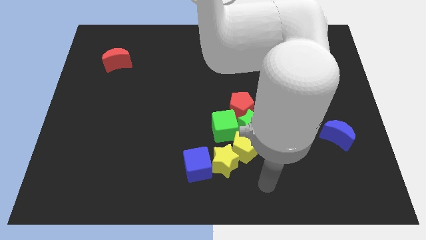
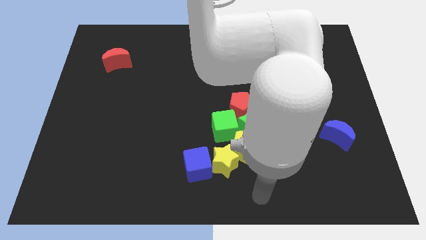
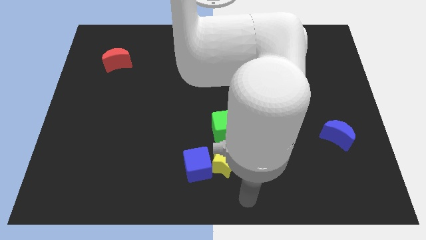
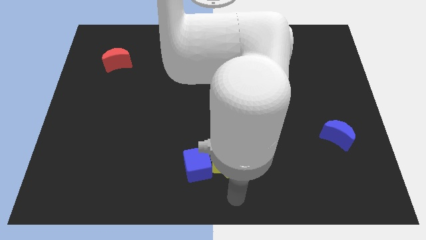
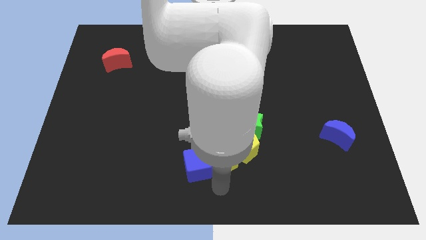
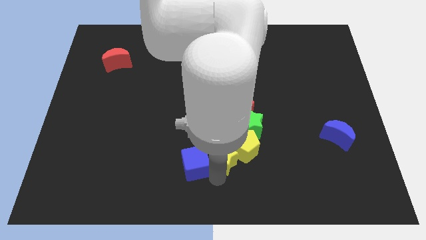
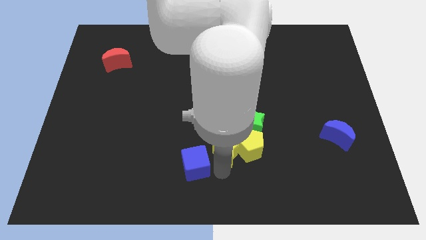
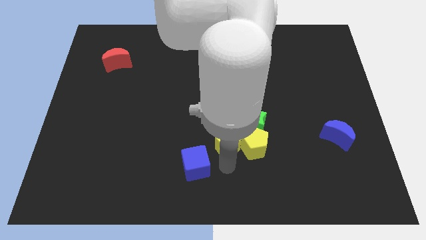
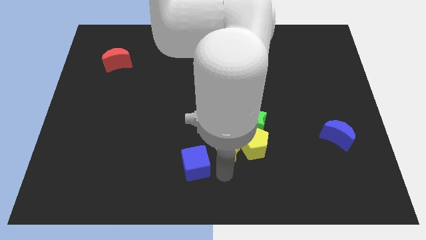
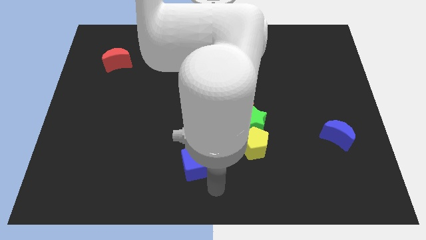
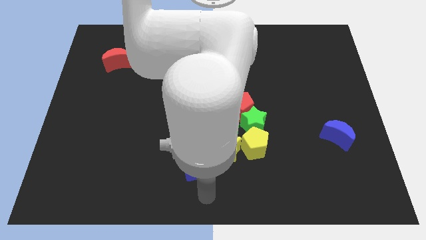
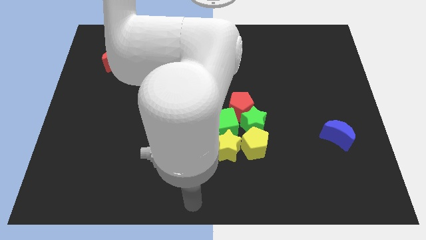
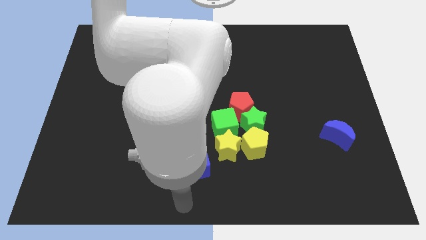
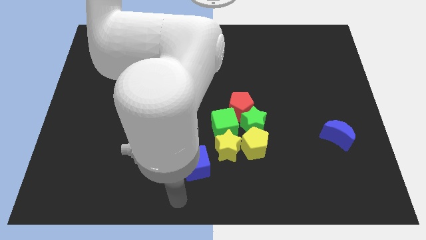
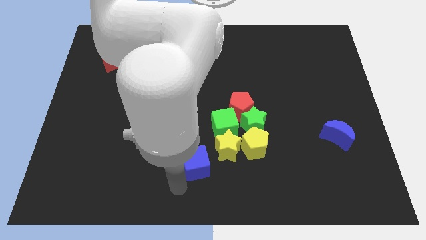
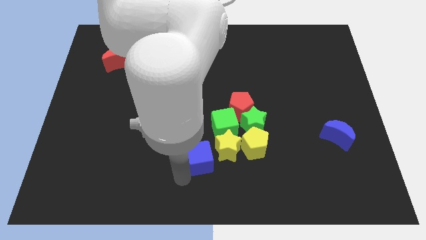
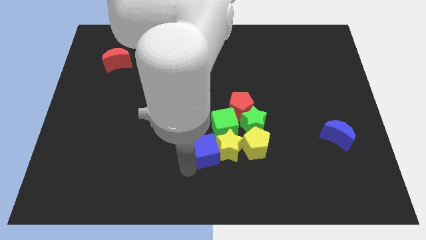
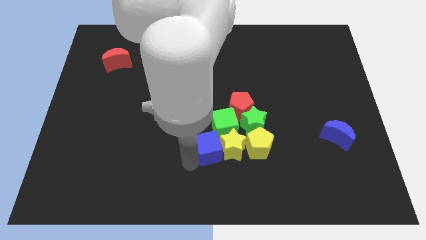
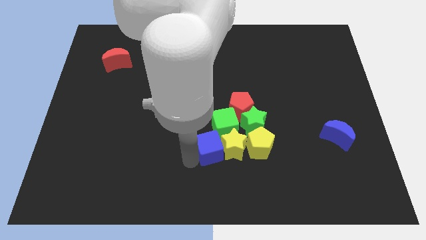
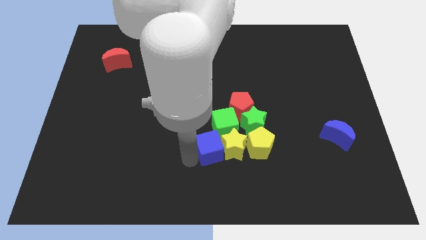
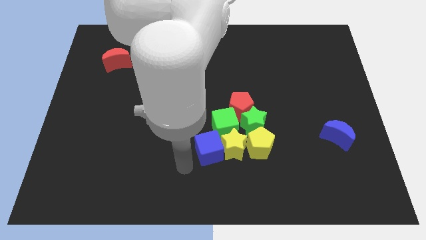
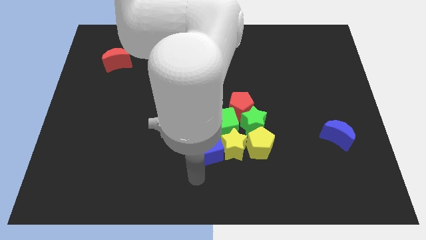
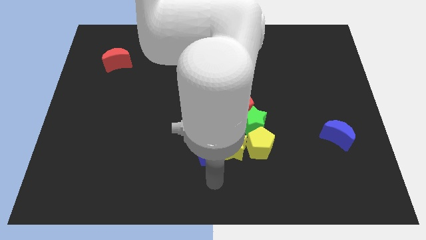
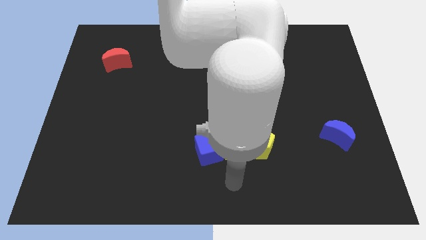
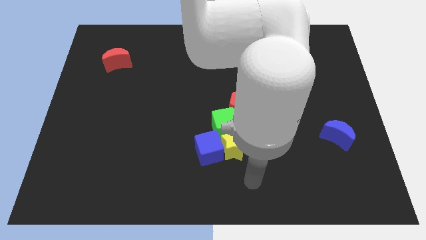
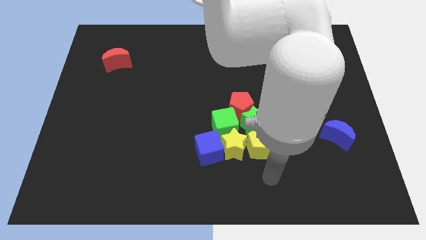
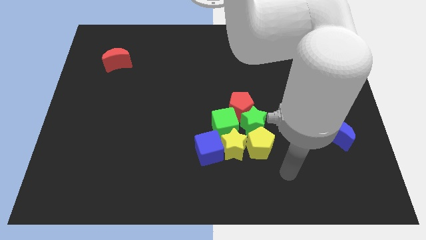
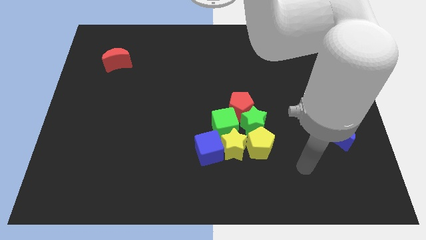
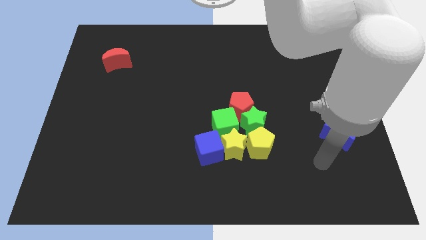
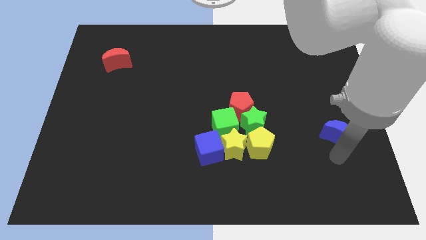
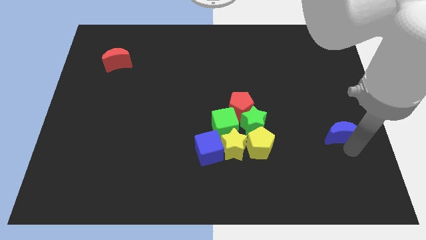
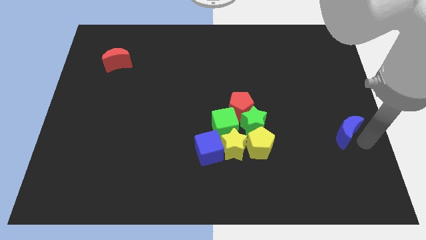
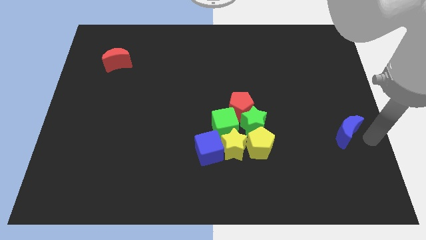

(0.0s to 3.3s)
push a group of blocks to the center of the board

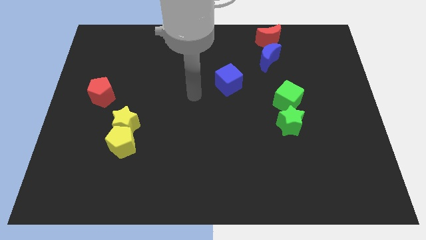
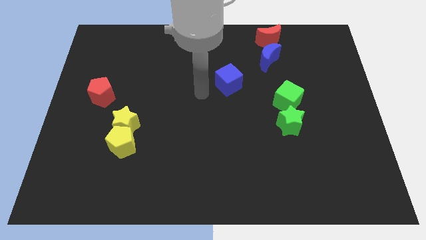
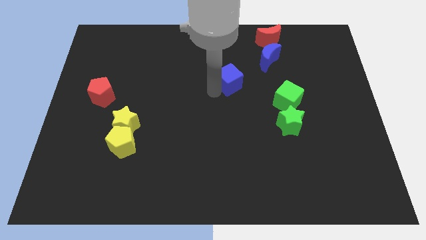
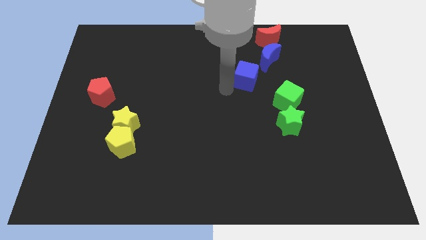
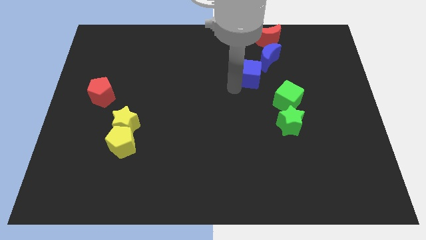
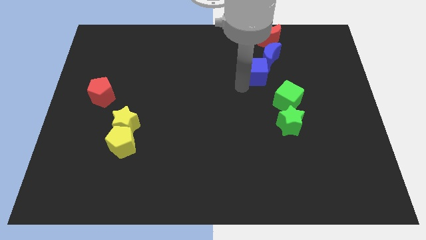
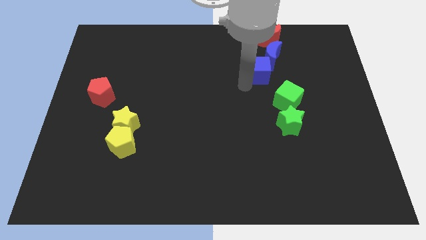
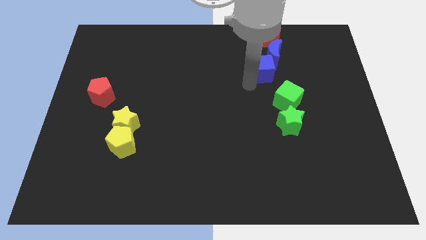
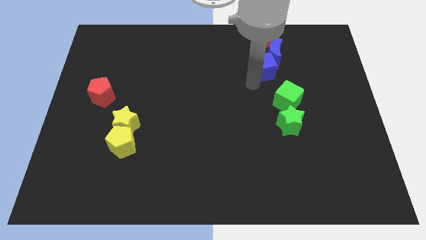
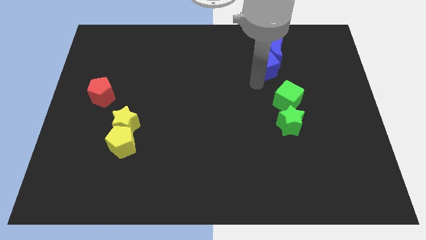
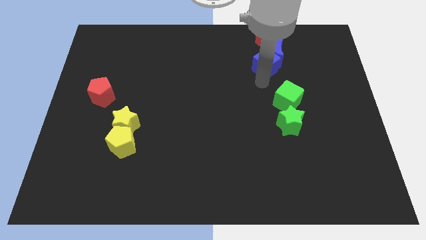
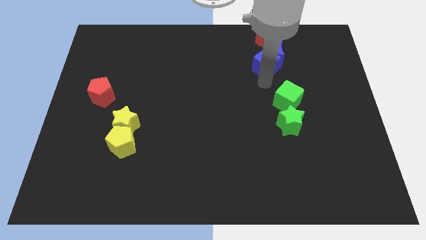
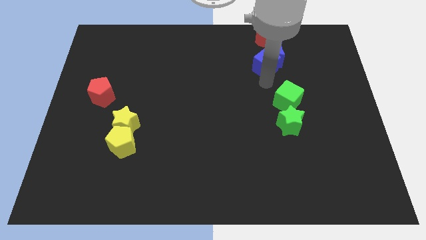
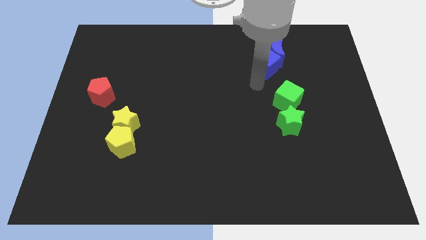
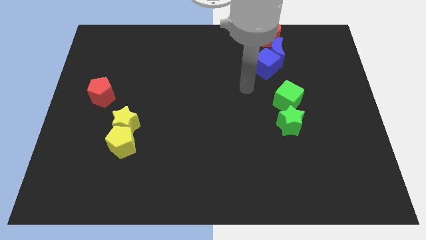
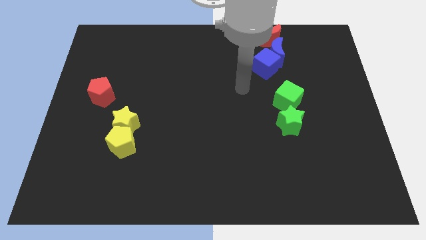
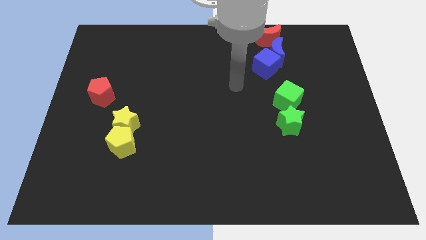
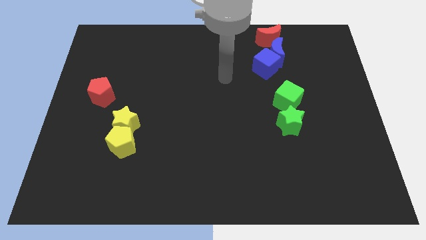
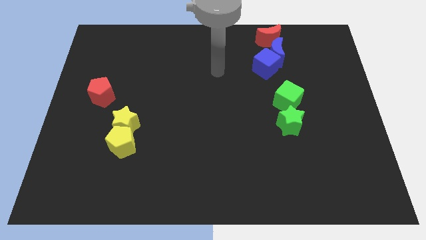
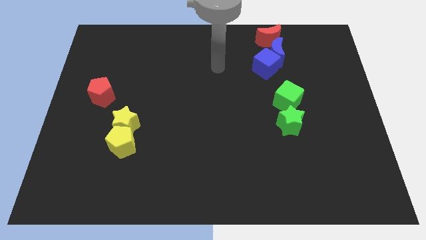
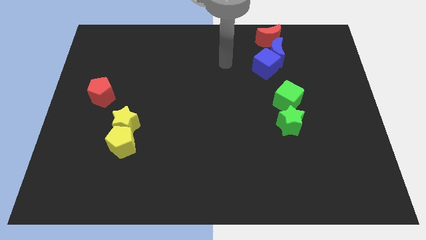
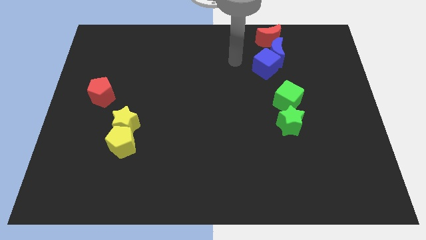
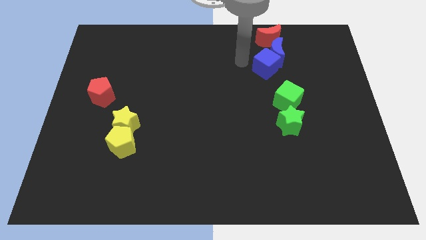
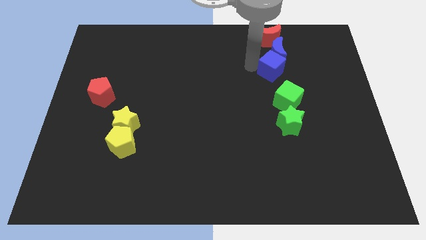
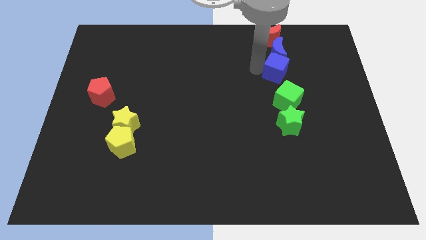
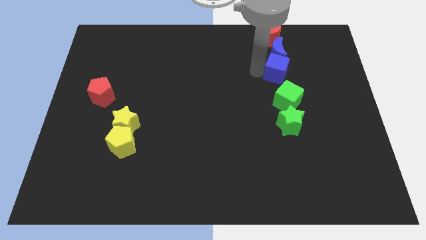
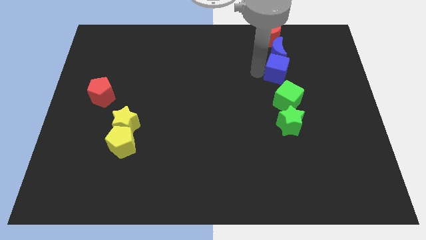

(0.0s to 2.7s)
place the blue cube in between blue crescent and green cube

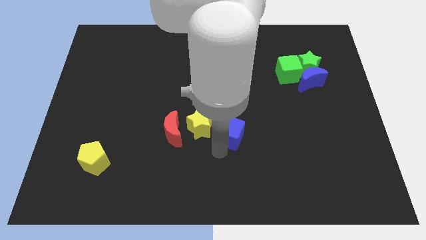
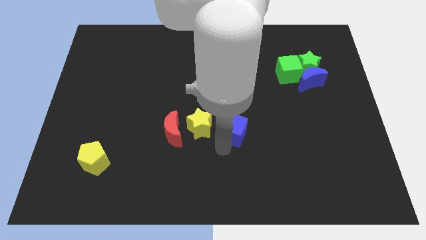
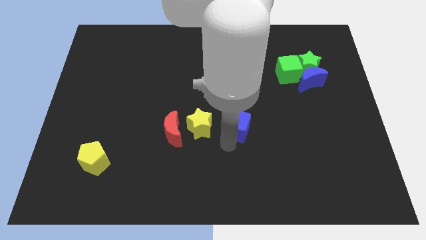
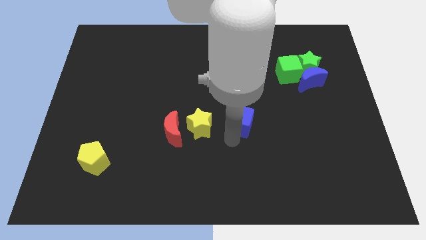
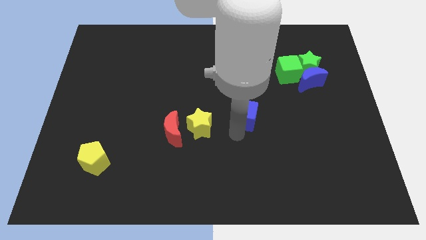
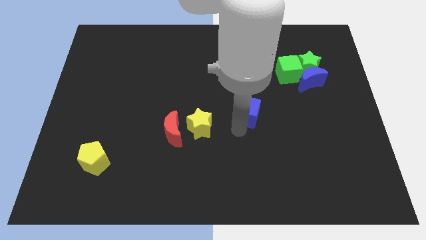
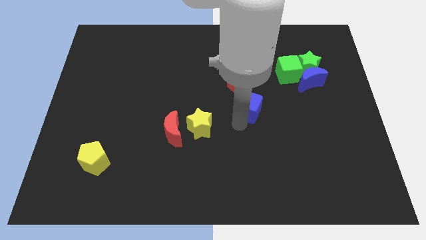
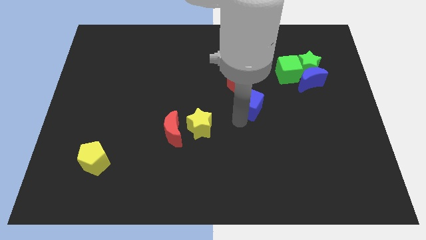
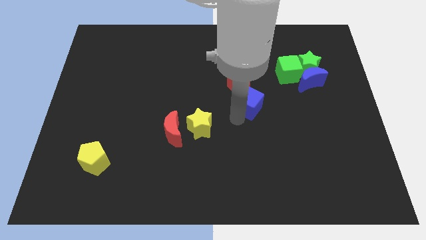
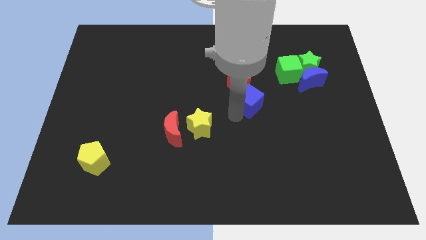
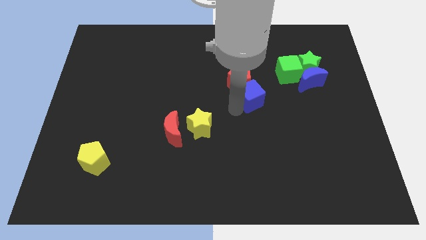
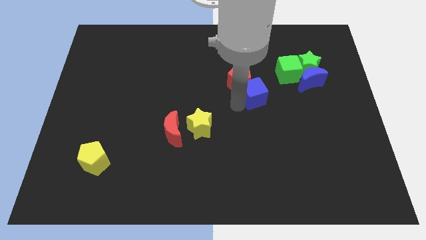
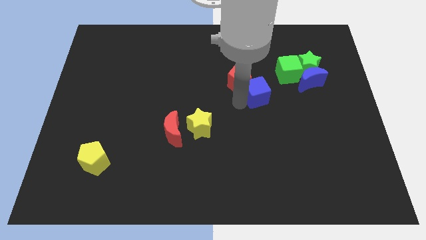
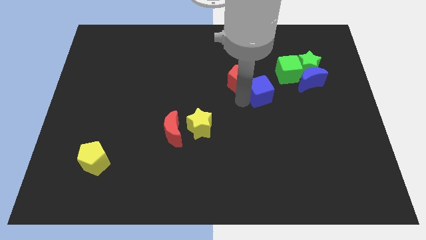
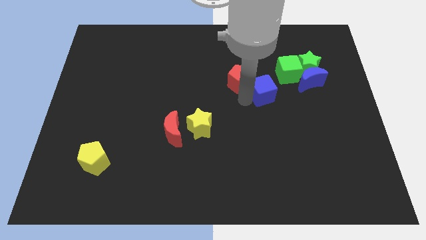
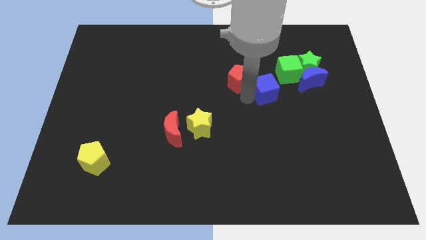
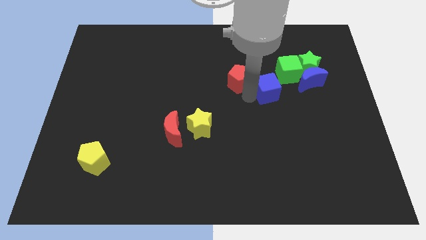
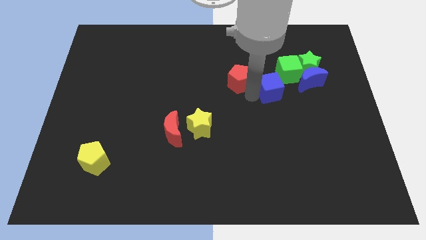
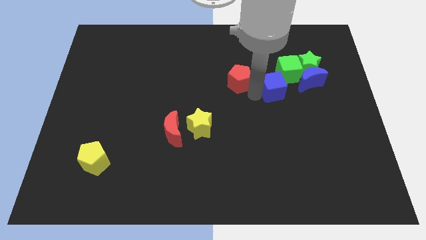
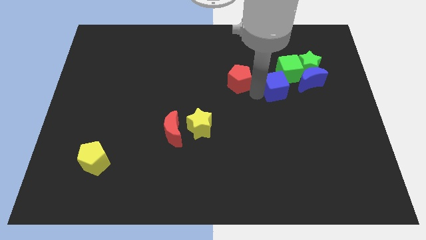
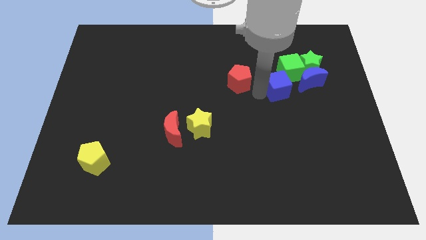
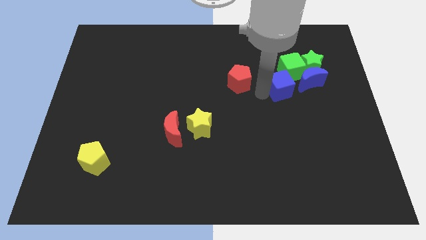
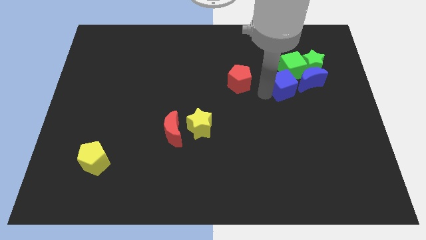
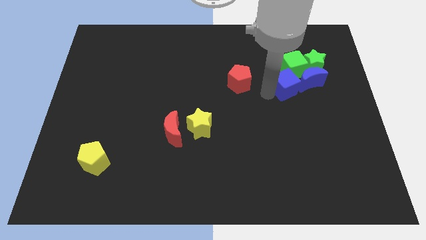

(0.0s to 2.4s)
push the blue cube into the blue crescent

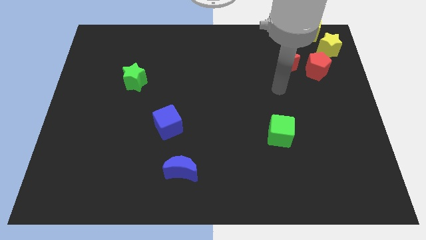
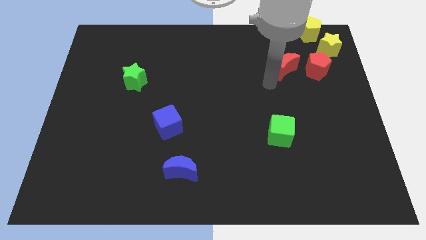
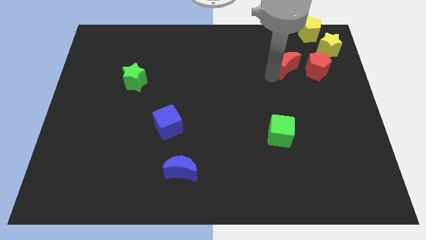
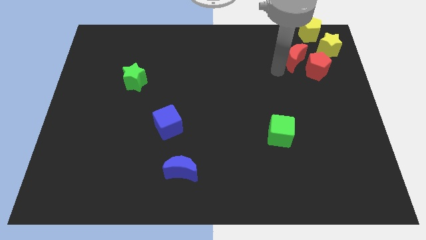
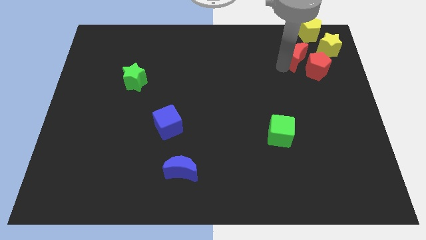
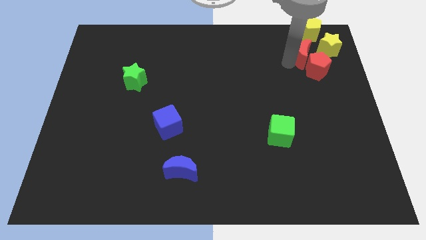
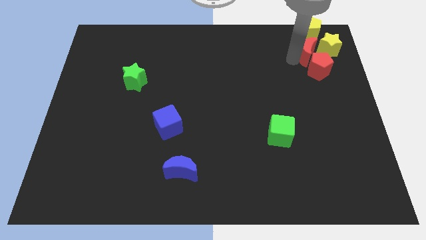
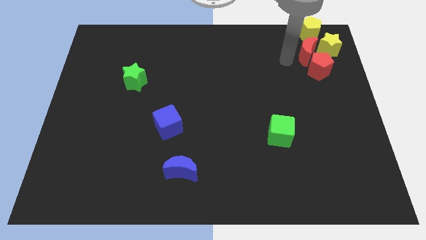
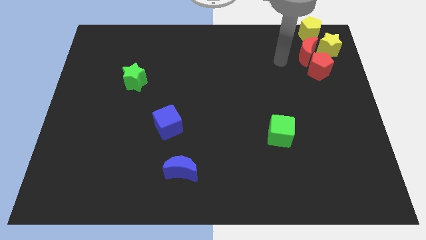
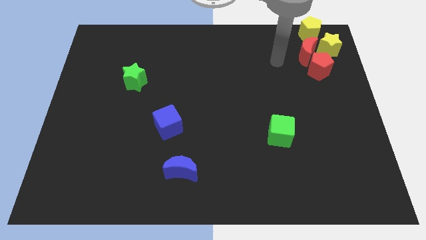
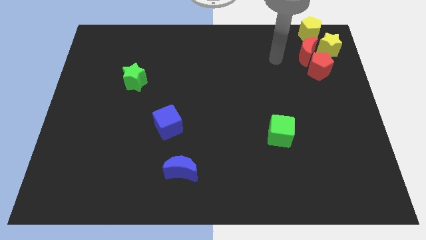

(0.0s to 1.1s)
place the red crescent in between yellow blocks
